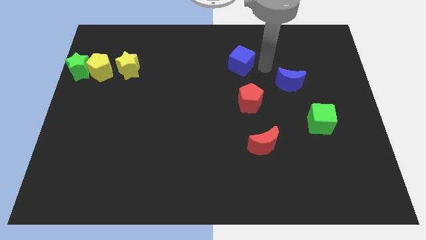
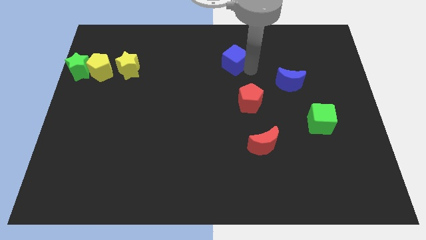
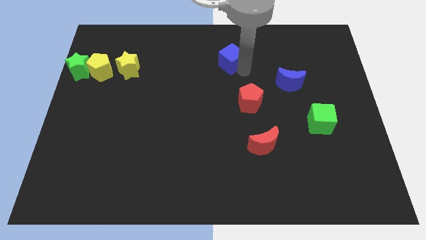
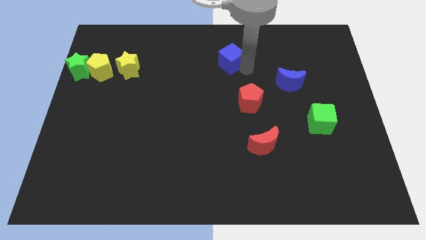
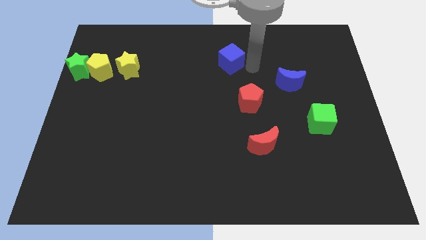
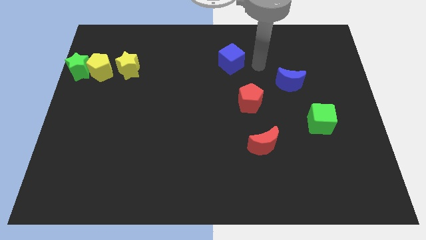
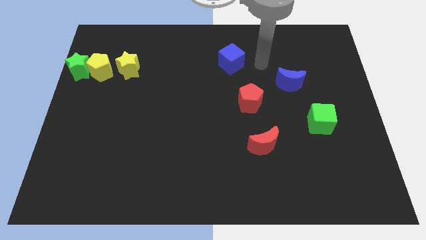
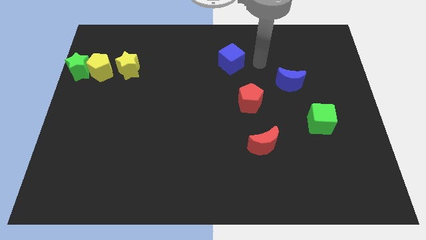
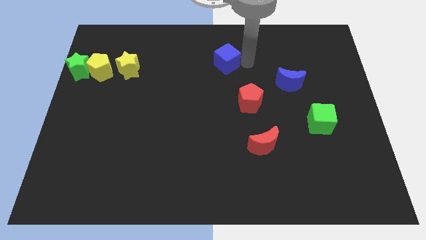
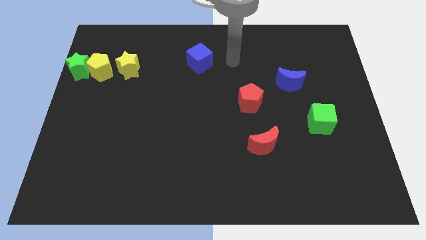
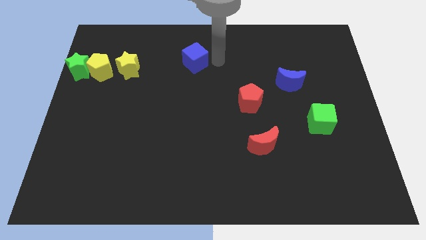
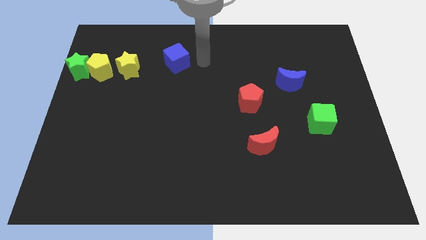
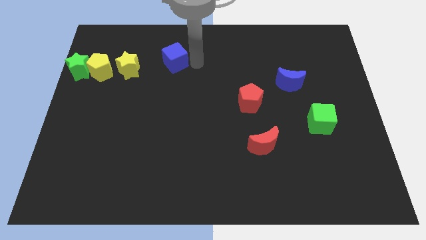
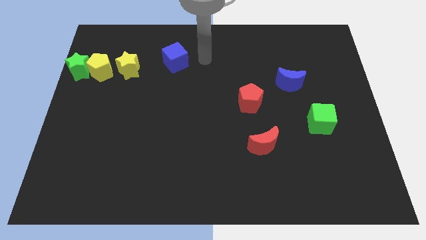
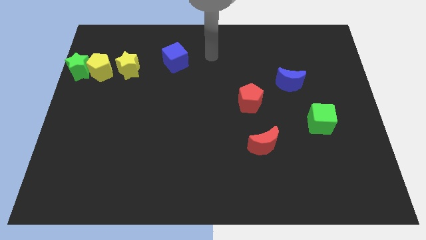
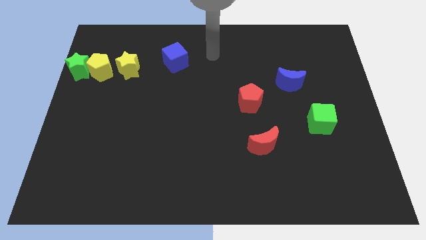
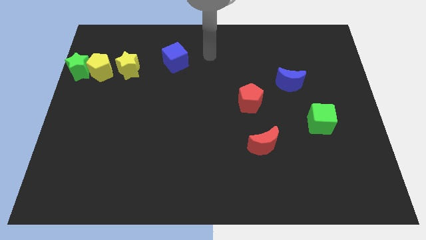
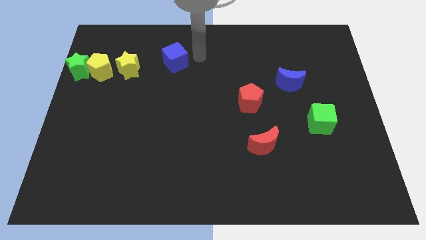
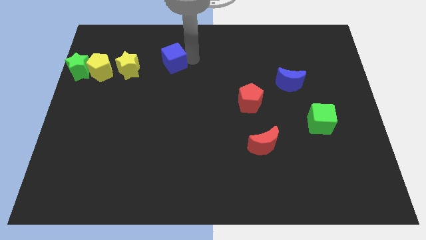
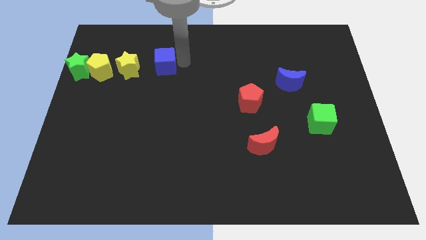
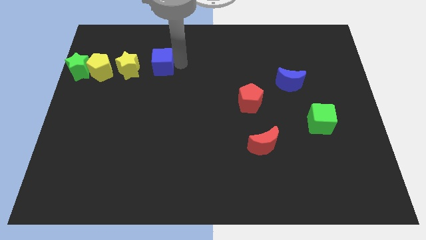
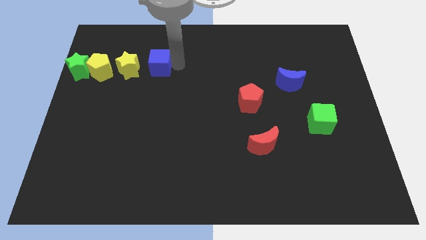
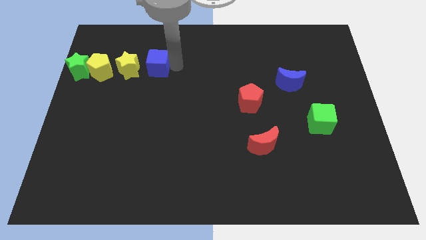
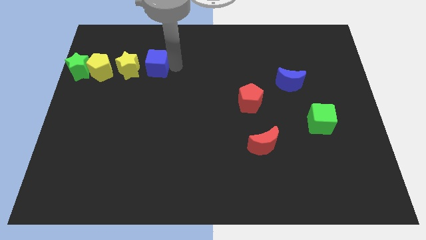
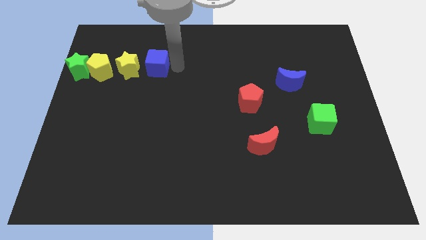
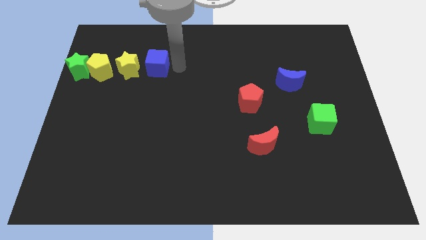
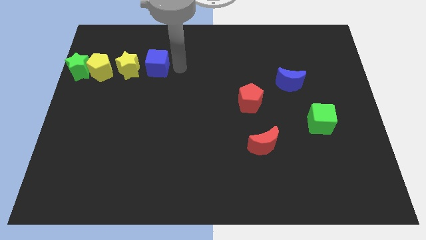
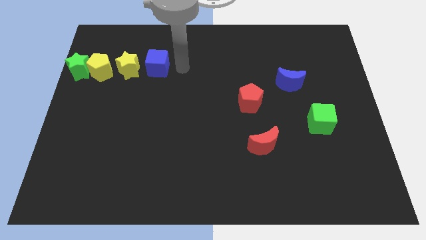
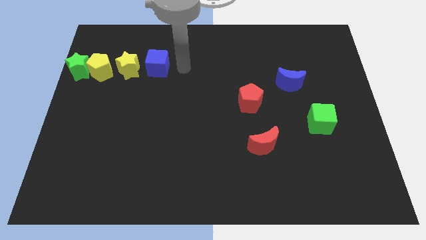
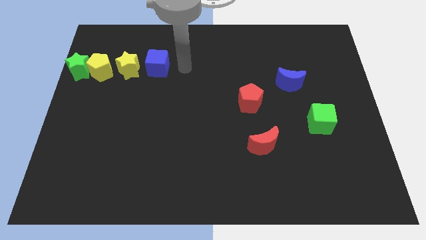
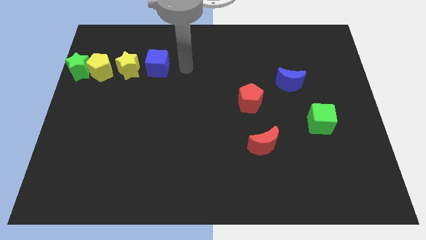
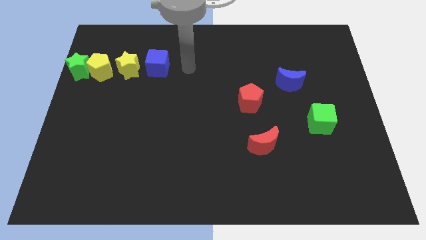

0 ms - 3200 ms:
push the blue cube to the right of the yellow star

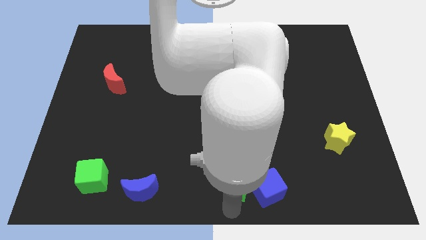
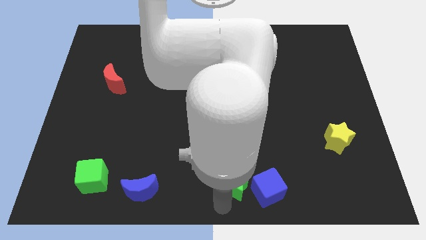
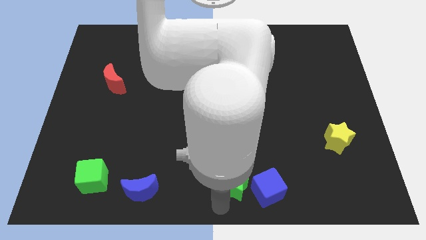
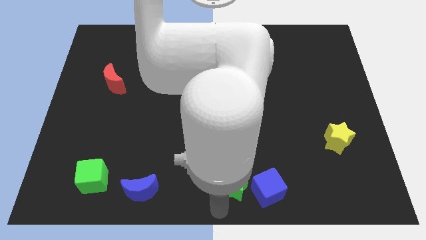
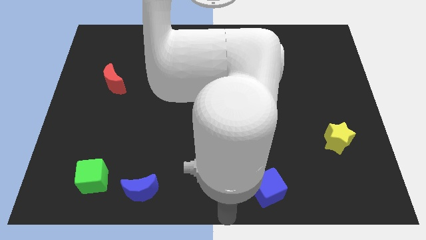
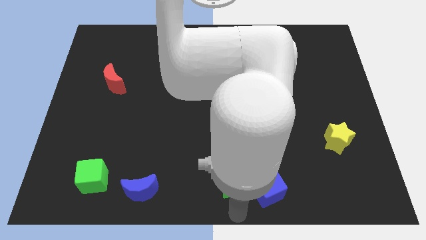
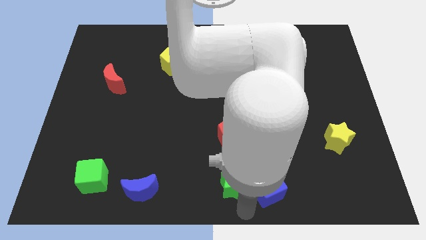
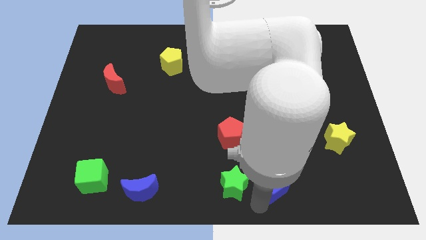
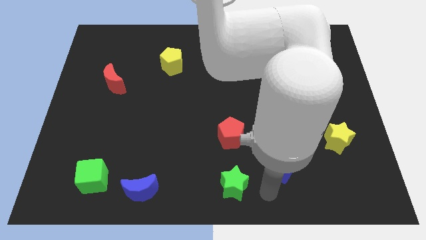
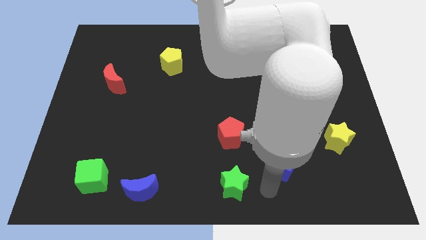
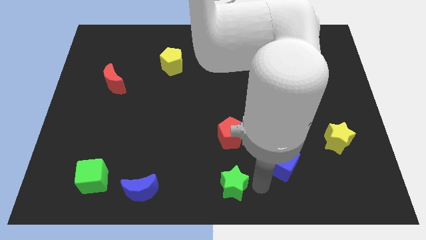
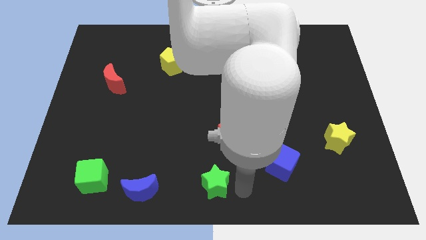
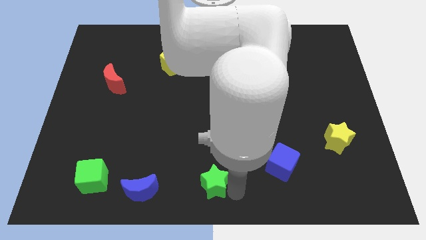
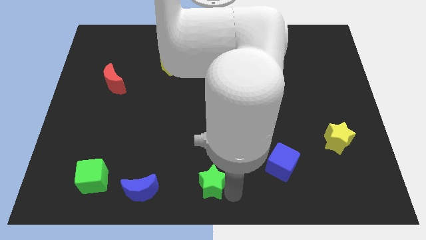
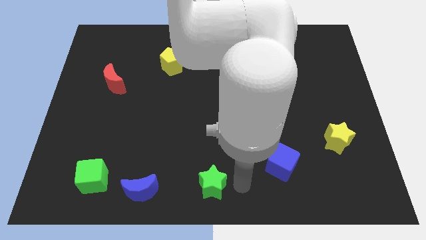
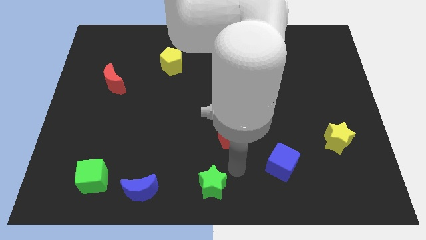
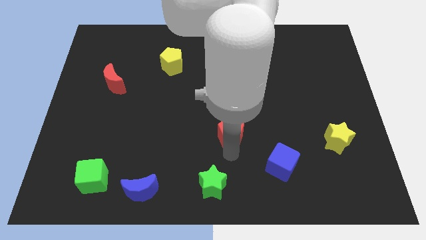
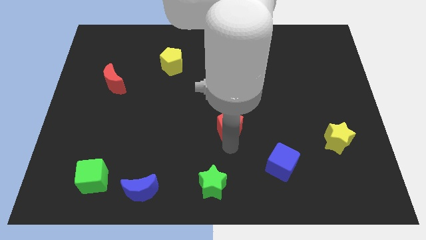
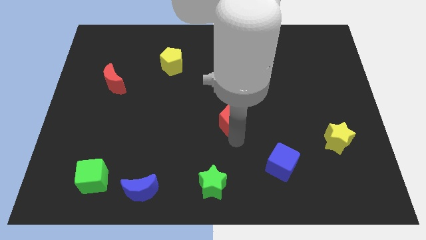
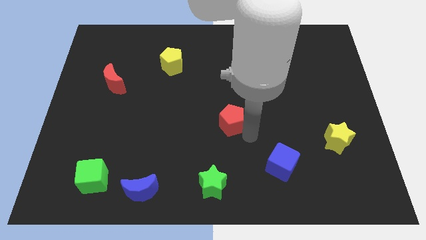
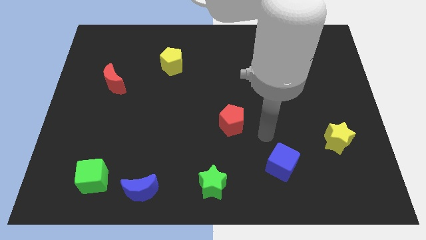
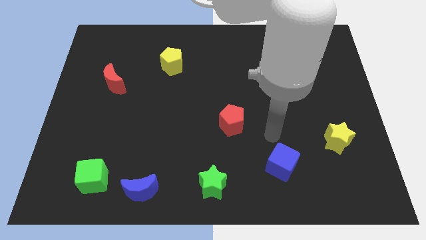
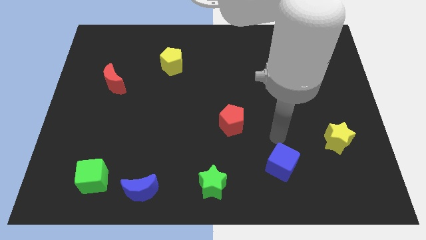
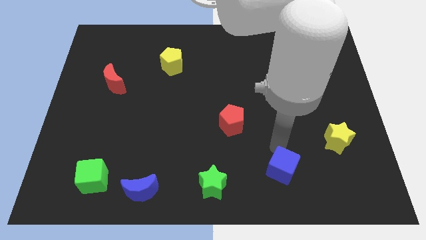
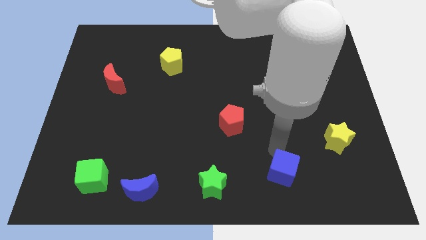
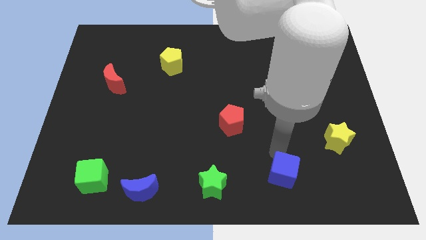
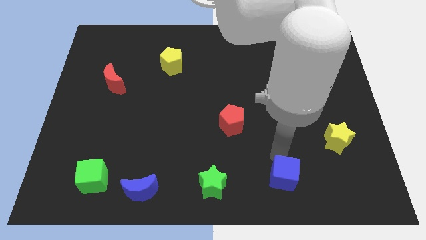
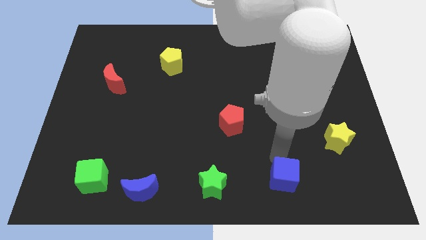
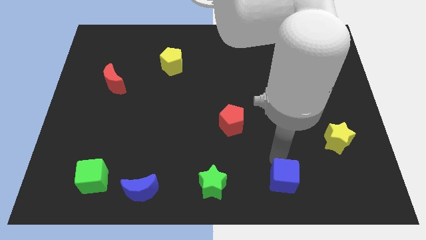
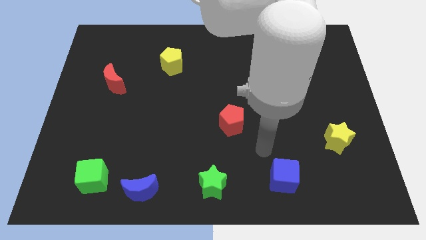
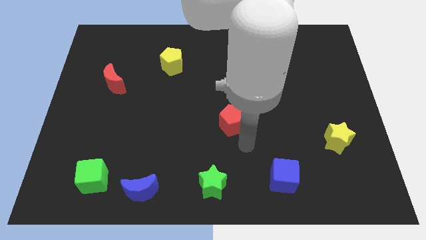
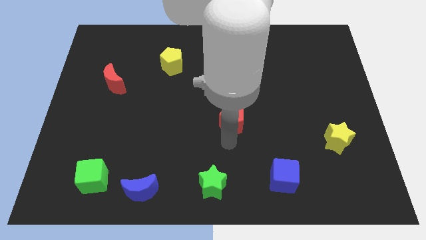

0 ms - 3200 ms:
separate the blue cube from the green star

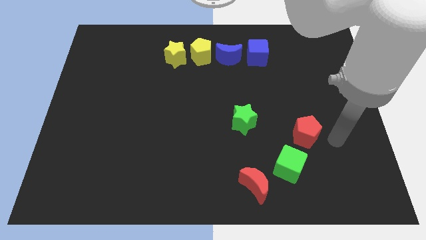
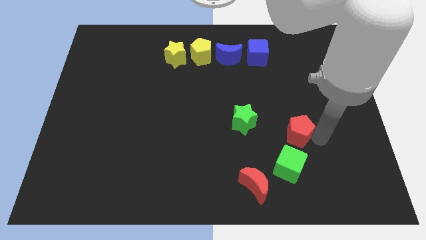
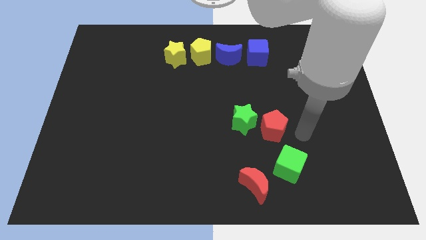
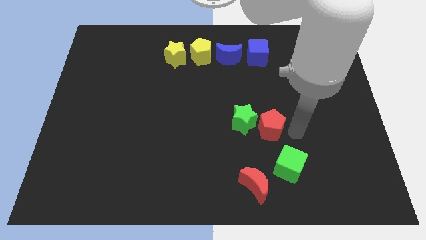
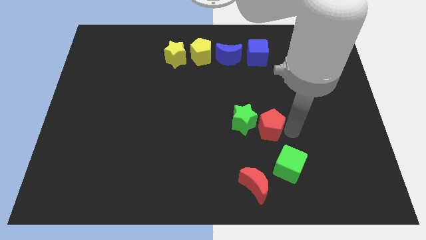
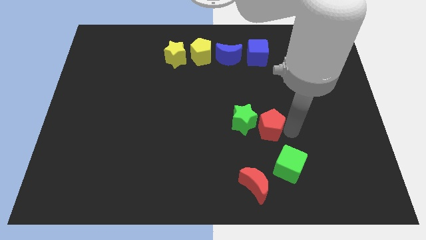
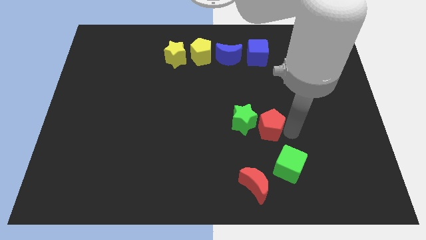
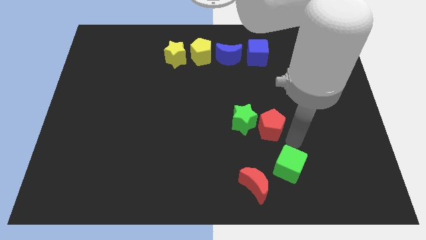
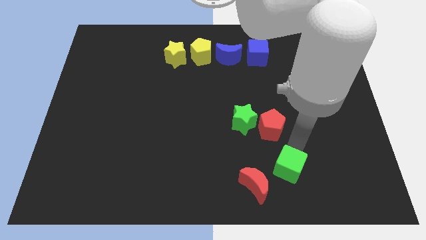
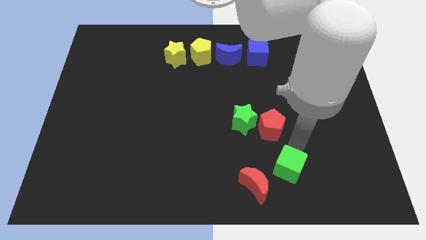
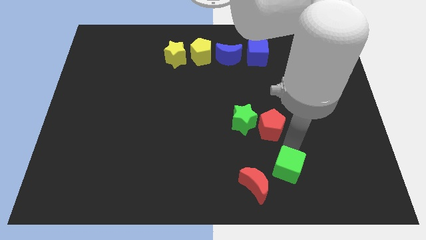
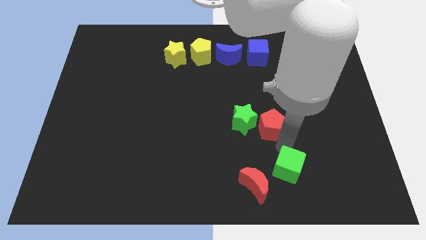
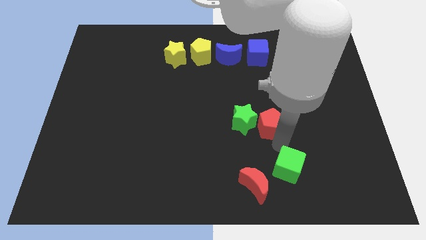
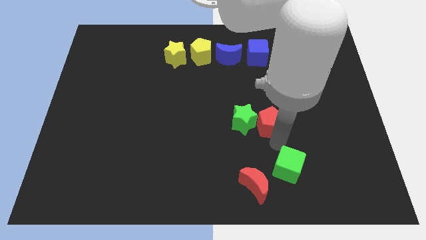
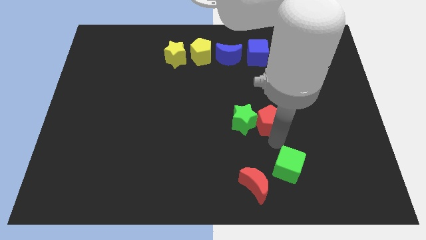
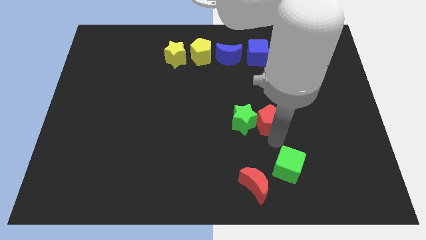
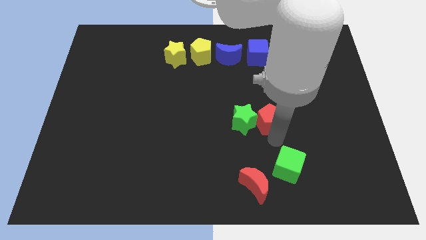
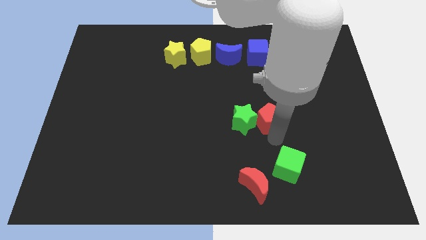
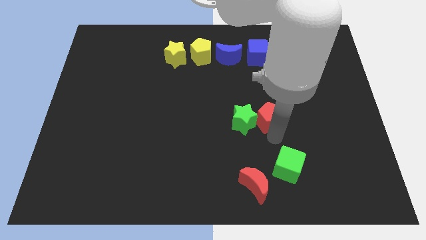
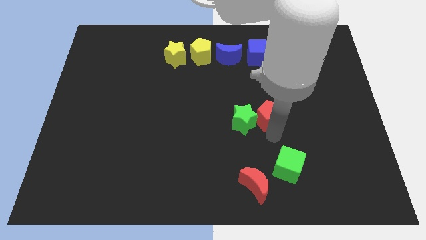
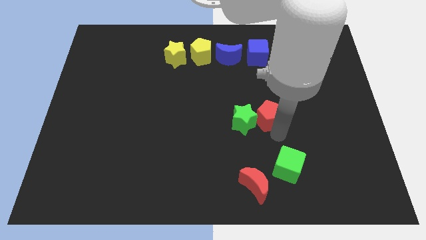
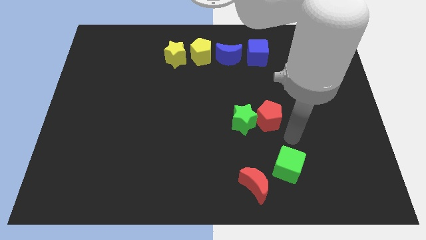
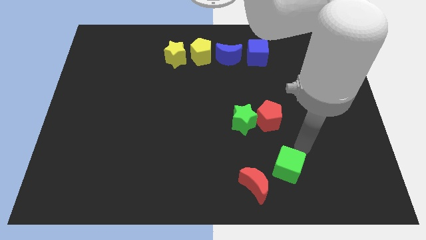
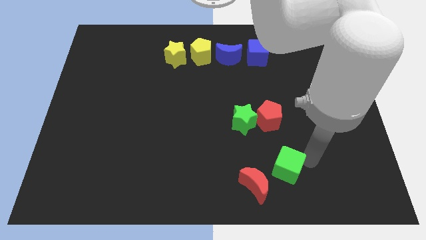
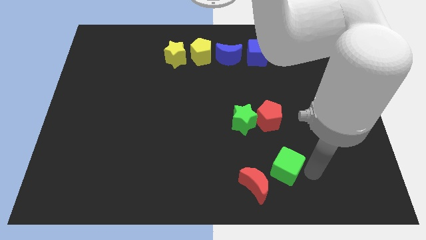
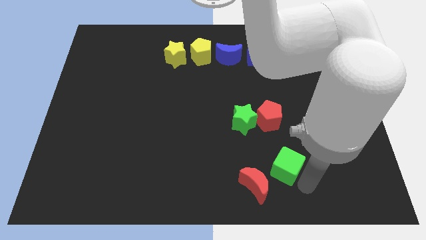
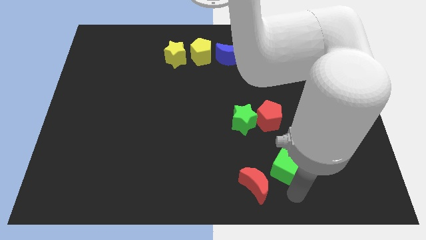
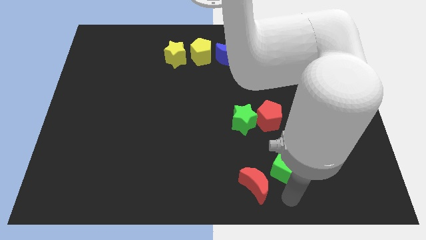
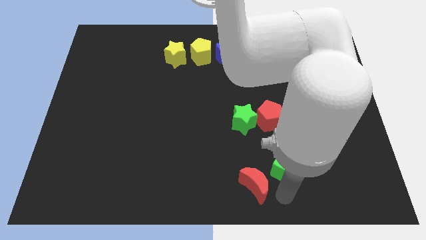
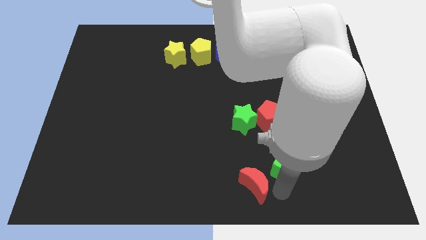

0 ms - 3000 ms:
drag the red pentagon close to green star
